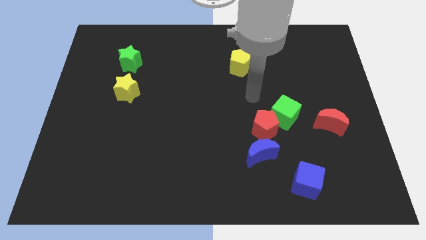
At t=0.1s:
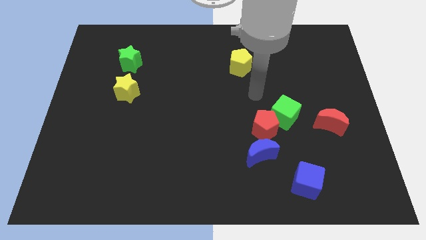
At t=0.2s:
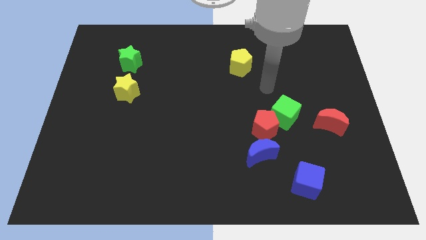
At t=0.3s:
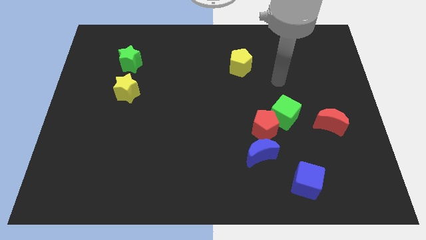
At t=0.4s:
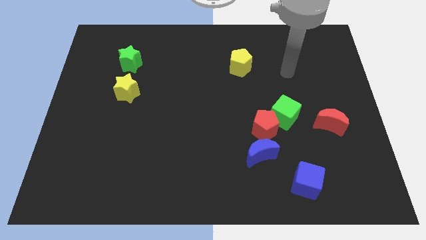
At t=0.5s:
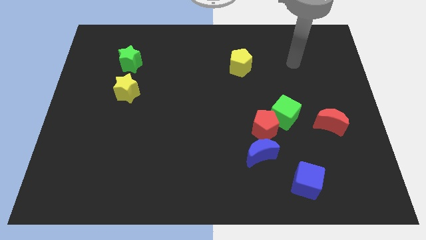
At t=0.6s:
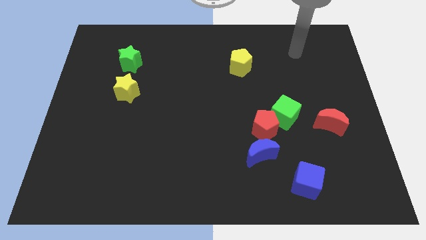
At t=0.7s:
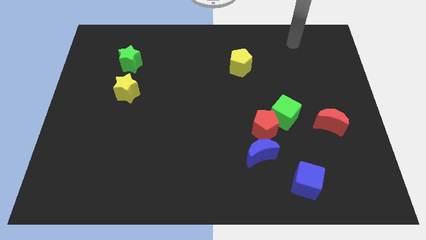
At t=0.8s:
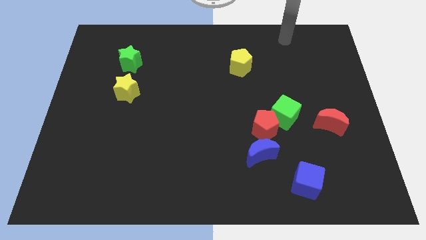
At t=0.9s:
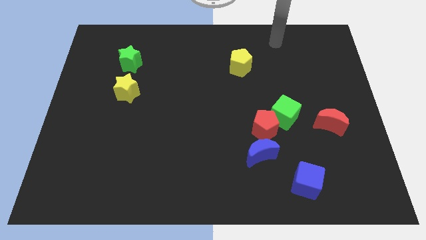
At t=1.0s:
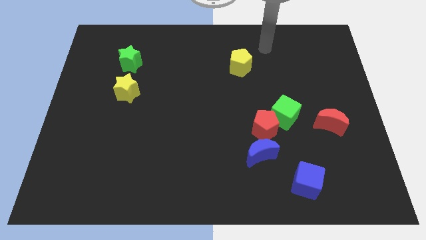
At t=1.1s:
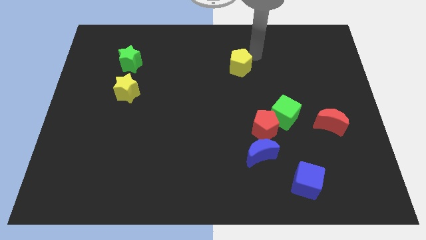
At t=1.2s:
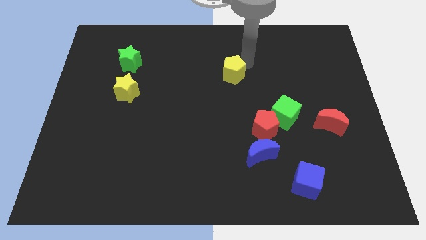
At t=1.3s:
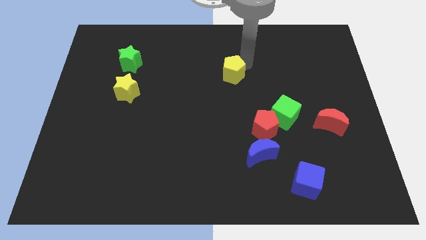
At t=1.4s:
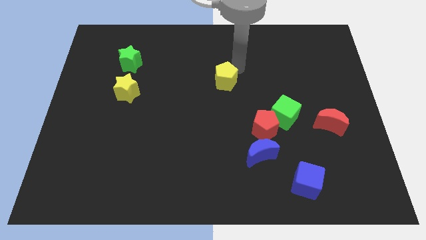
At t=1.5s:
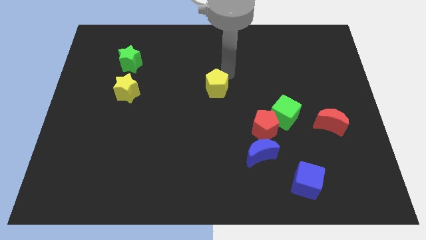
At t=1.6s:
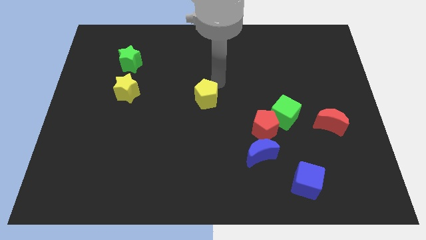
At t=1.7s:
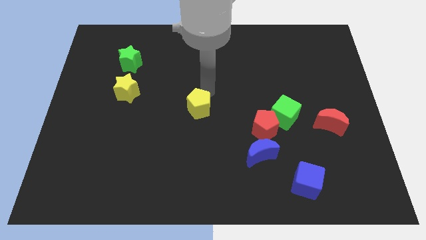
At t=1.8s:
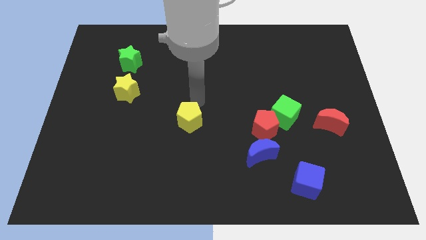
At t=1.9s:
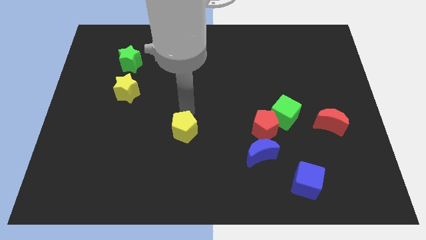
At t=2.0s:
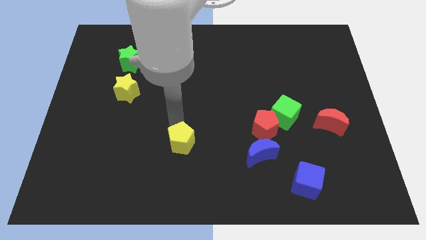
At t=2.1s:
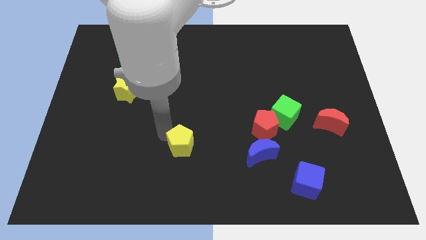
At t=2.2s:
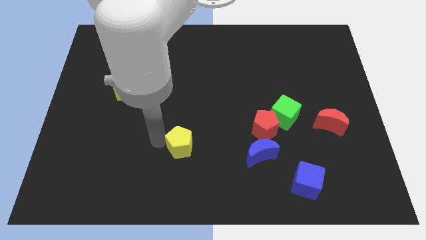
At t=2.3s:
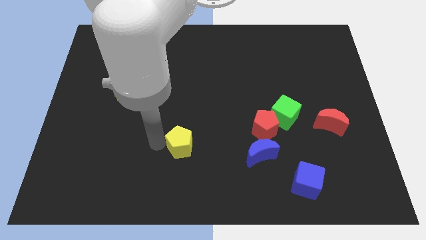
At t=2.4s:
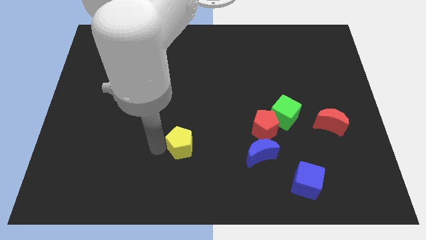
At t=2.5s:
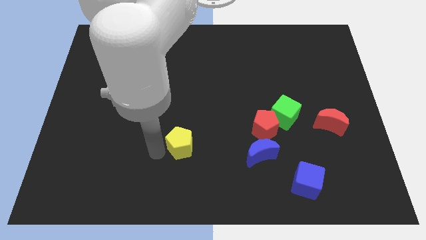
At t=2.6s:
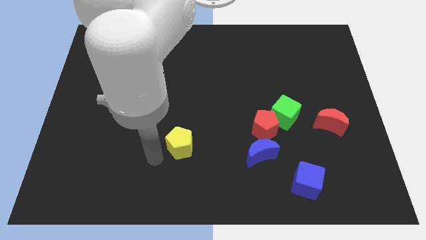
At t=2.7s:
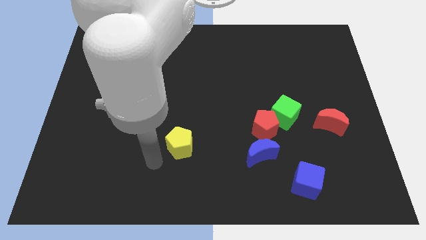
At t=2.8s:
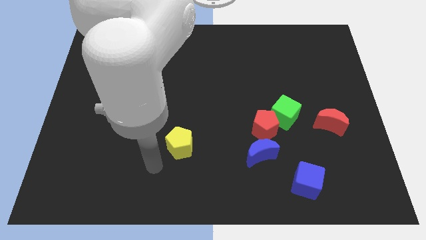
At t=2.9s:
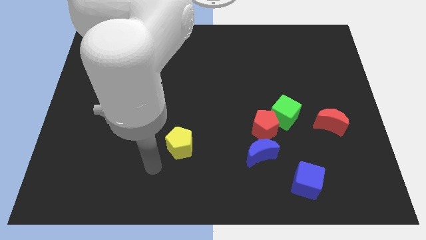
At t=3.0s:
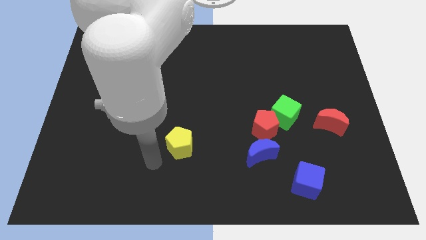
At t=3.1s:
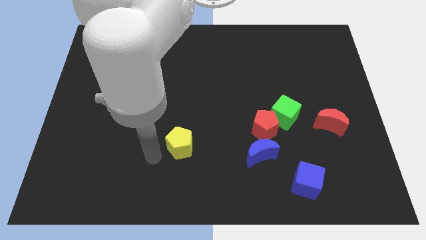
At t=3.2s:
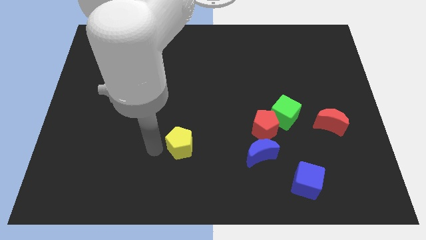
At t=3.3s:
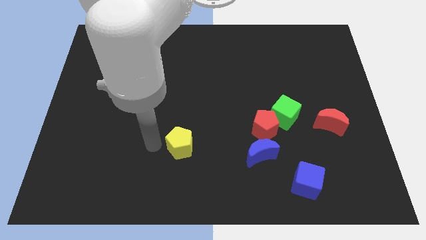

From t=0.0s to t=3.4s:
place the yellow pentagon left to the blue moon

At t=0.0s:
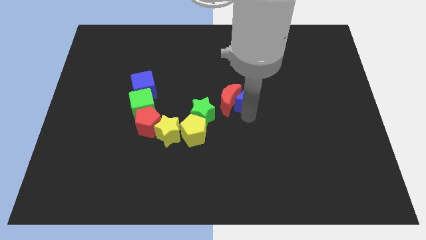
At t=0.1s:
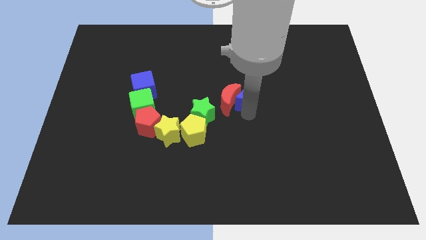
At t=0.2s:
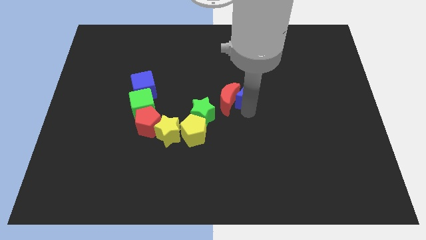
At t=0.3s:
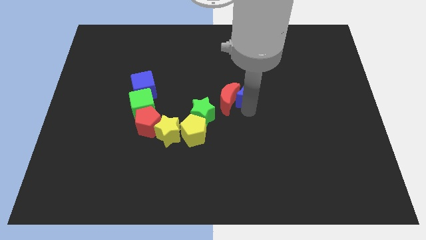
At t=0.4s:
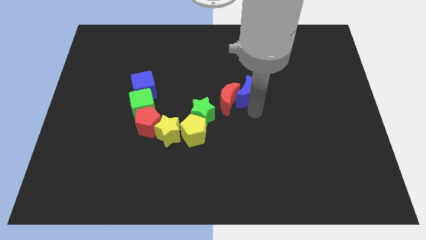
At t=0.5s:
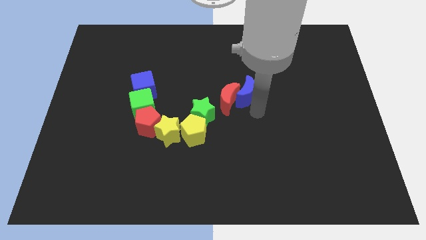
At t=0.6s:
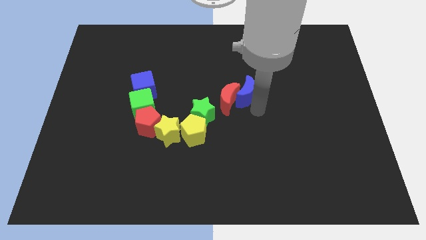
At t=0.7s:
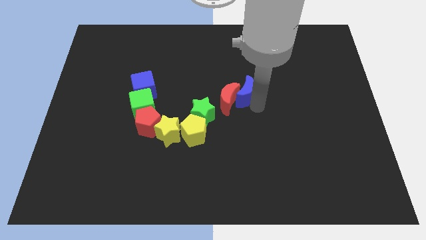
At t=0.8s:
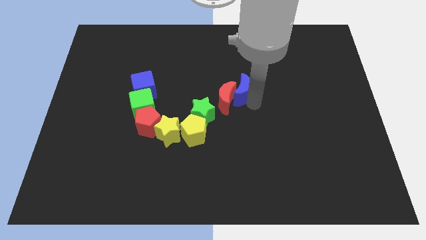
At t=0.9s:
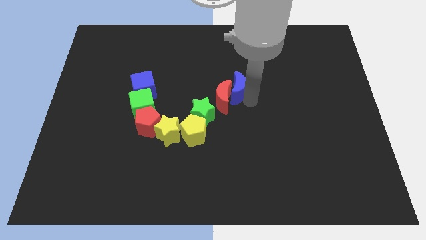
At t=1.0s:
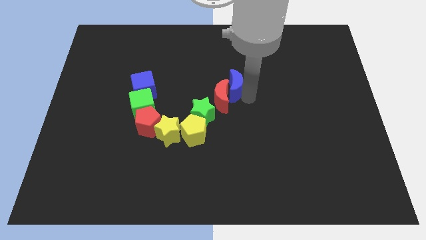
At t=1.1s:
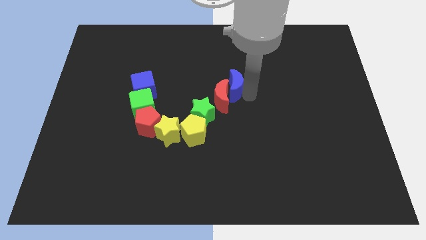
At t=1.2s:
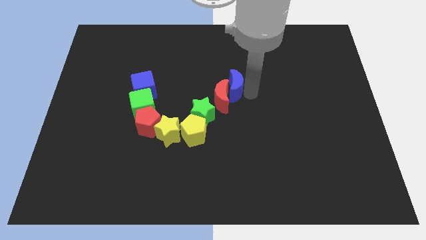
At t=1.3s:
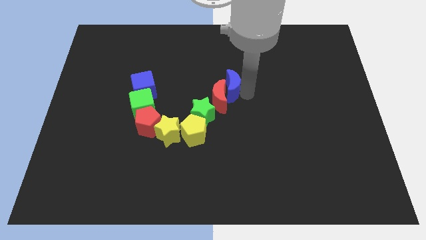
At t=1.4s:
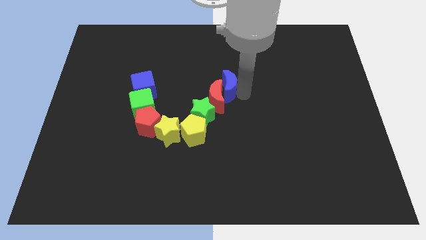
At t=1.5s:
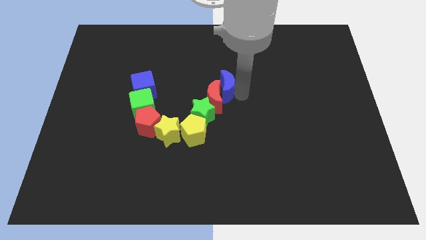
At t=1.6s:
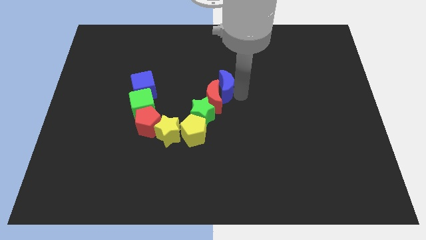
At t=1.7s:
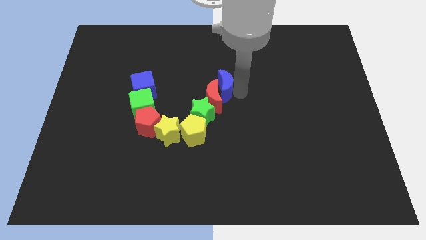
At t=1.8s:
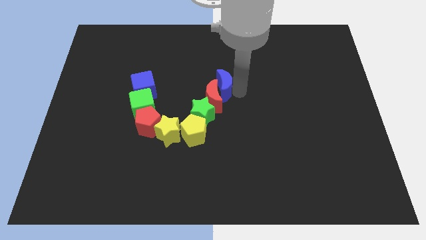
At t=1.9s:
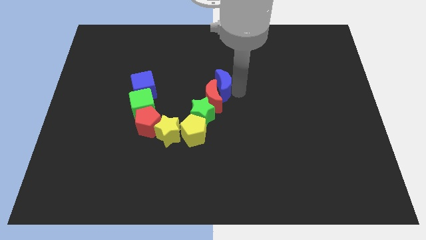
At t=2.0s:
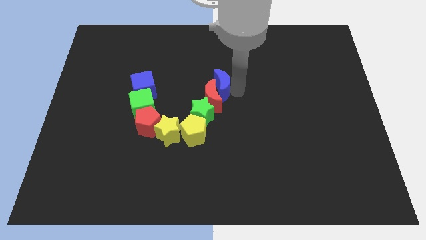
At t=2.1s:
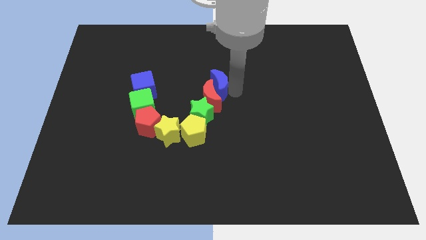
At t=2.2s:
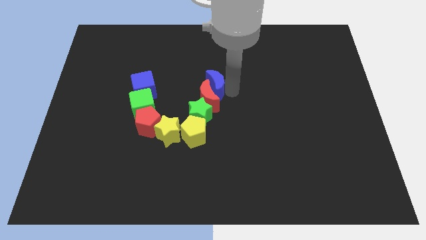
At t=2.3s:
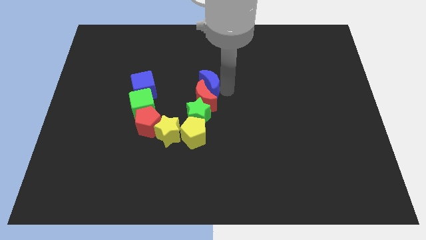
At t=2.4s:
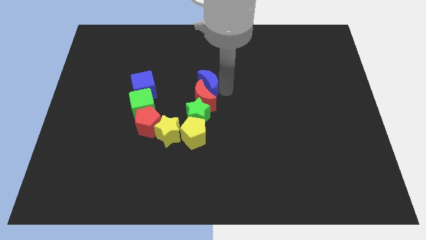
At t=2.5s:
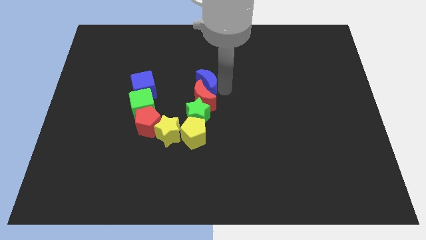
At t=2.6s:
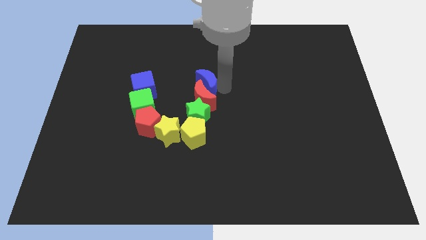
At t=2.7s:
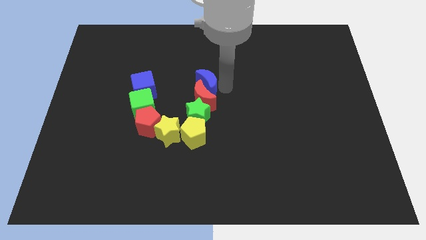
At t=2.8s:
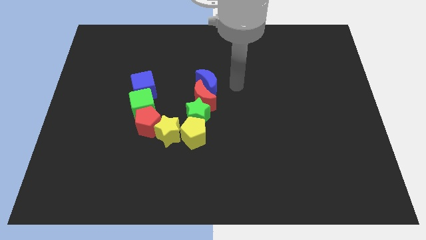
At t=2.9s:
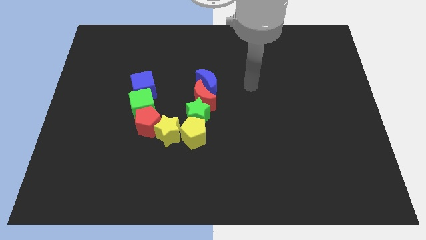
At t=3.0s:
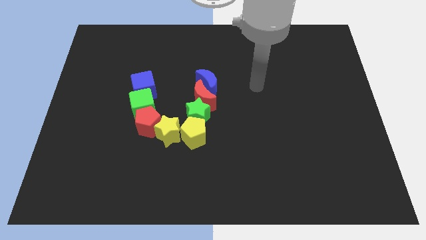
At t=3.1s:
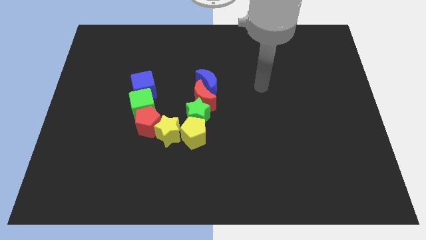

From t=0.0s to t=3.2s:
place the red crescent and blue crescent on top of green star

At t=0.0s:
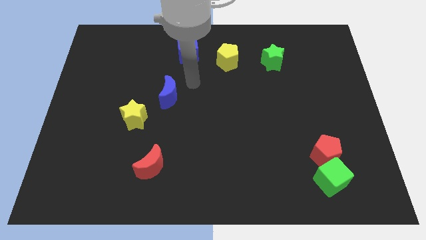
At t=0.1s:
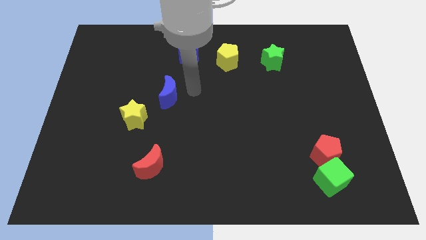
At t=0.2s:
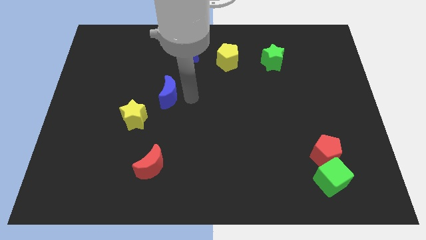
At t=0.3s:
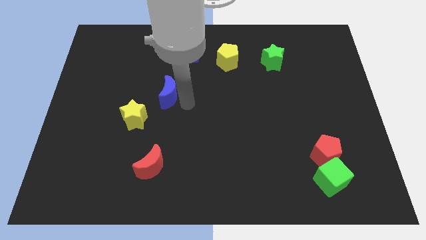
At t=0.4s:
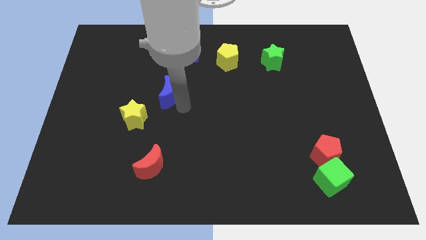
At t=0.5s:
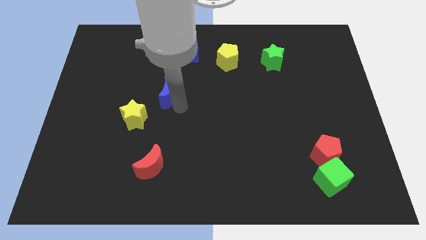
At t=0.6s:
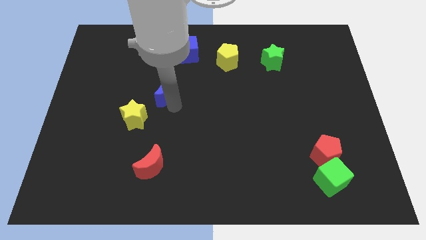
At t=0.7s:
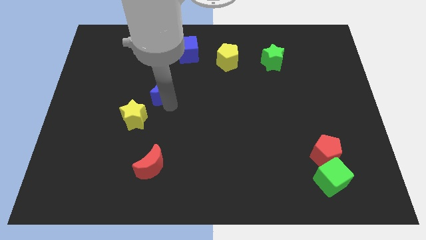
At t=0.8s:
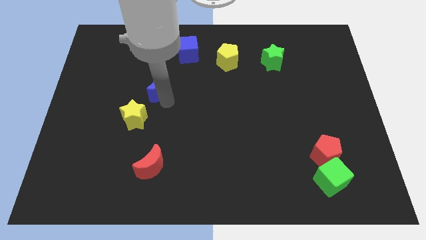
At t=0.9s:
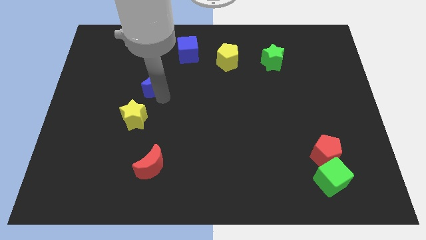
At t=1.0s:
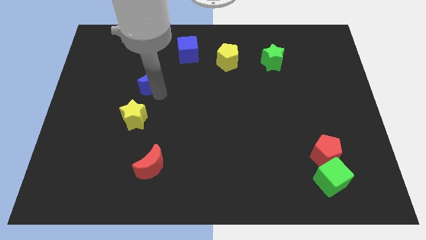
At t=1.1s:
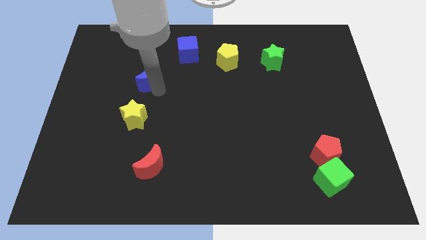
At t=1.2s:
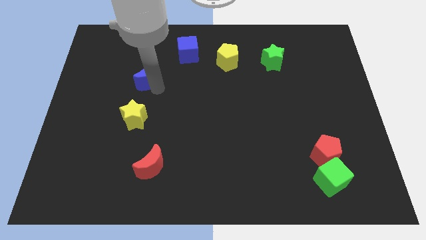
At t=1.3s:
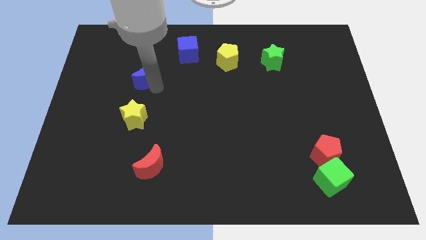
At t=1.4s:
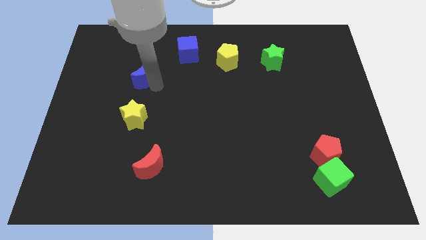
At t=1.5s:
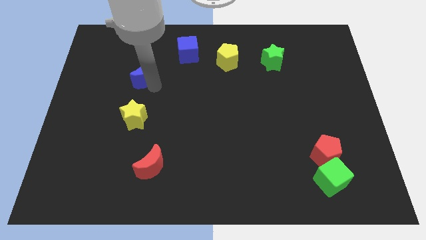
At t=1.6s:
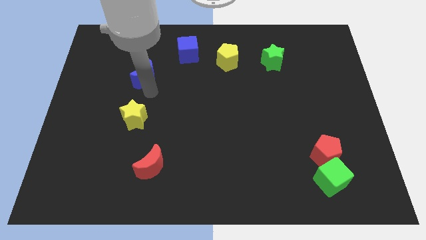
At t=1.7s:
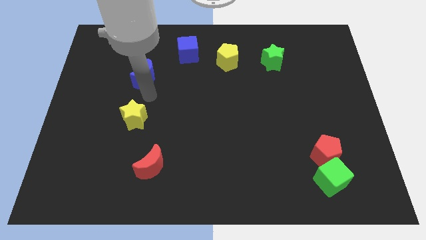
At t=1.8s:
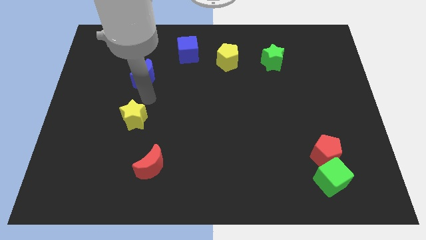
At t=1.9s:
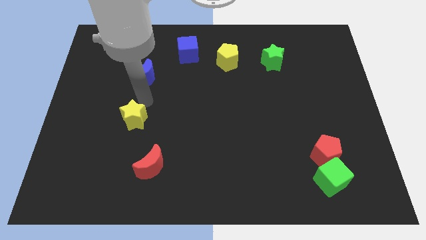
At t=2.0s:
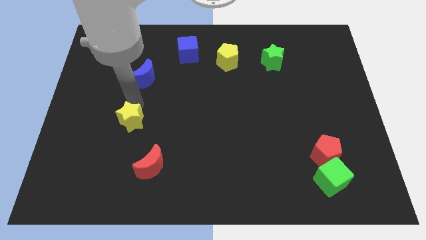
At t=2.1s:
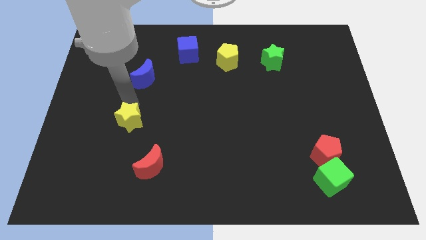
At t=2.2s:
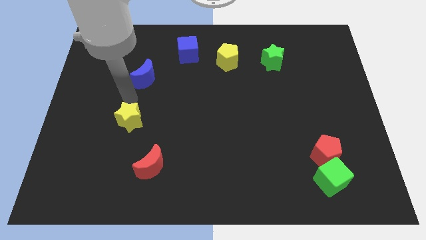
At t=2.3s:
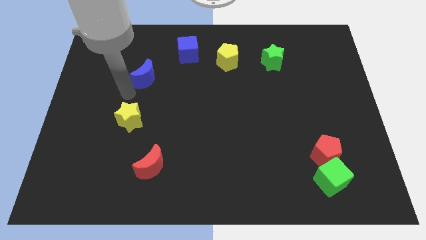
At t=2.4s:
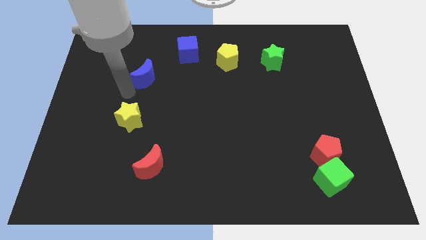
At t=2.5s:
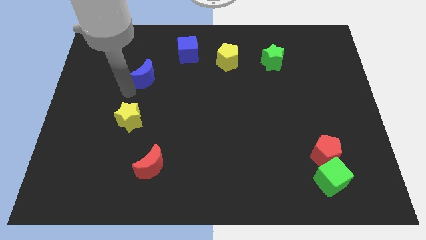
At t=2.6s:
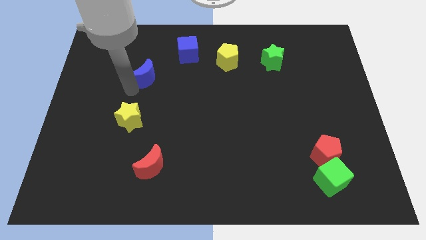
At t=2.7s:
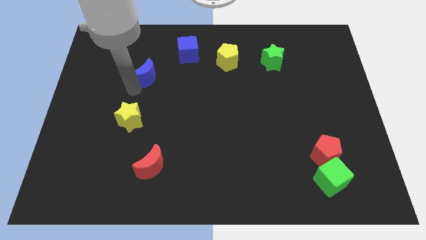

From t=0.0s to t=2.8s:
place the blue moon above the yellow star
